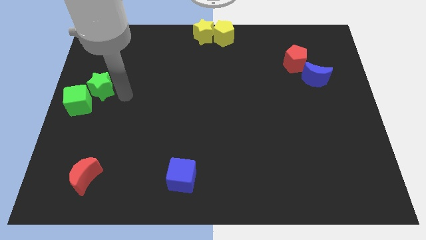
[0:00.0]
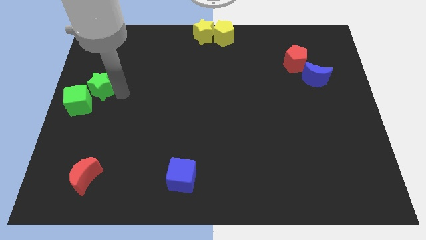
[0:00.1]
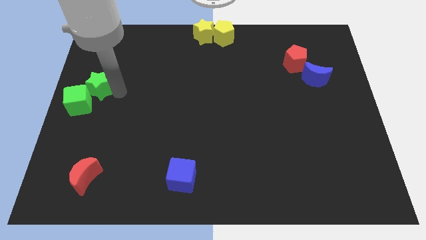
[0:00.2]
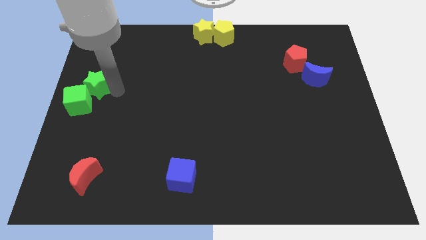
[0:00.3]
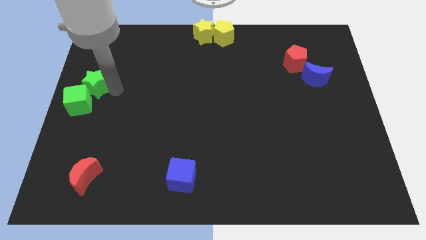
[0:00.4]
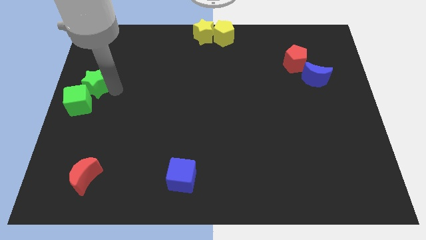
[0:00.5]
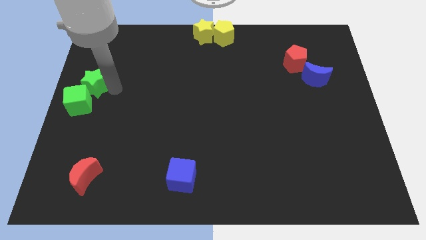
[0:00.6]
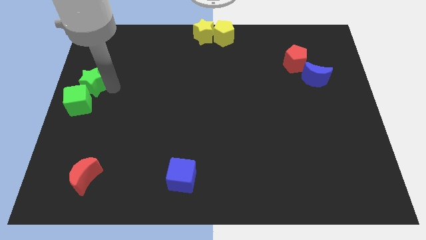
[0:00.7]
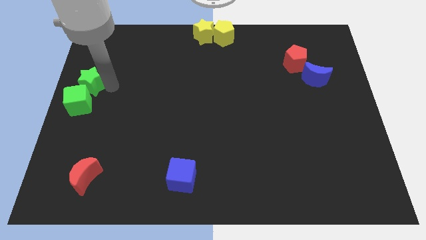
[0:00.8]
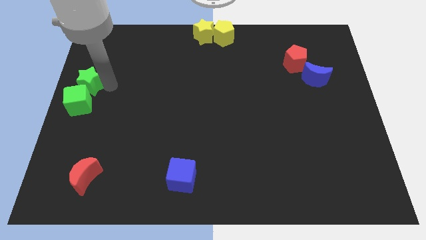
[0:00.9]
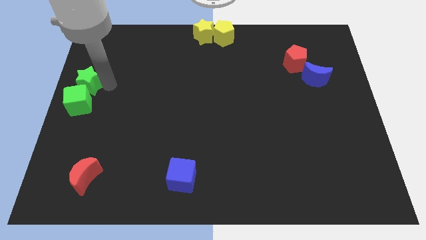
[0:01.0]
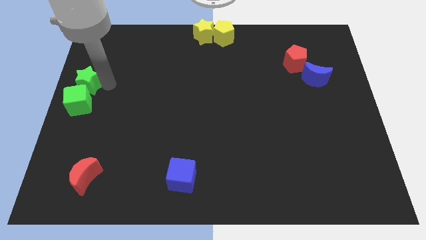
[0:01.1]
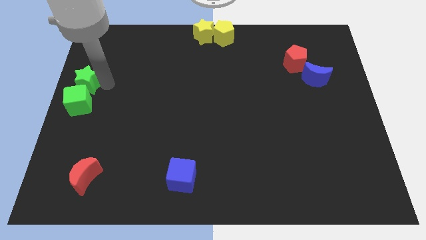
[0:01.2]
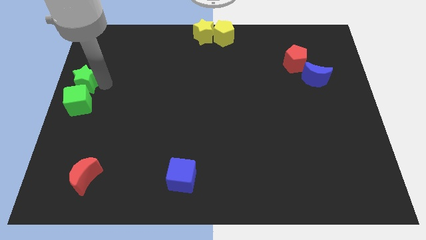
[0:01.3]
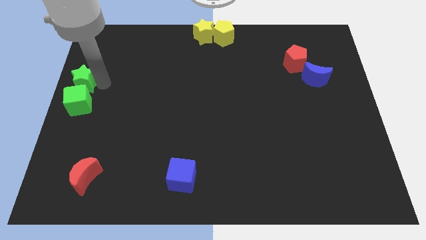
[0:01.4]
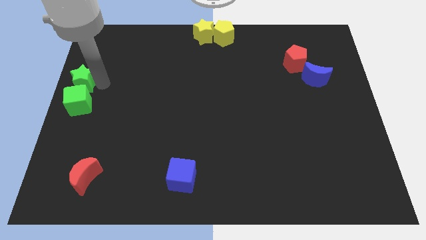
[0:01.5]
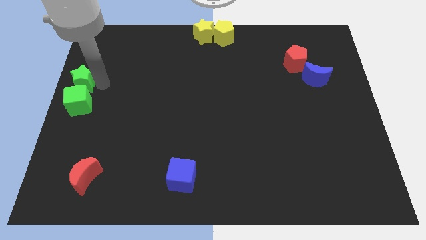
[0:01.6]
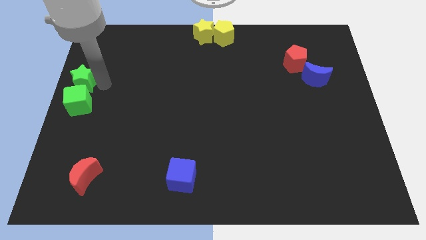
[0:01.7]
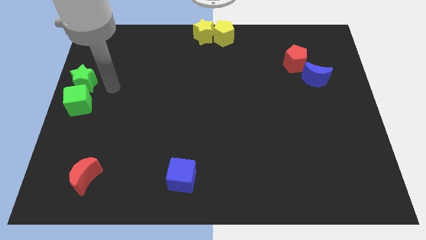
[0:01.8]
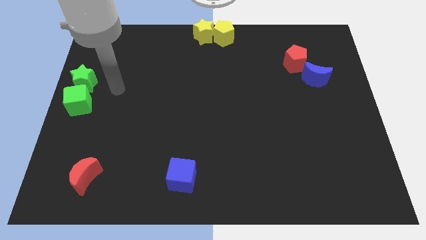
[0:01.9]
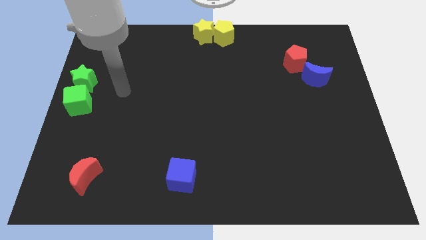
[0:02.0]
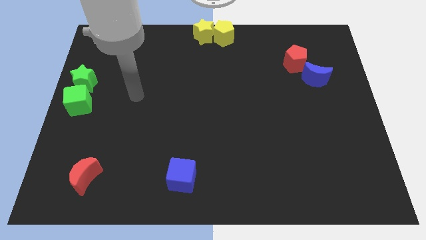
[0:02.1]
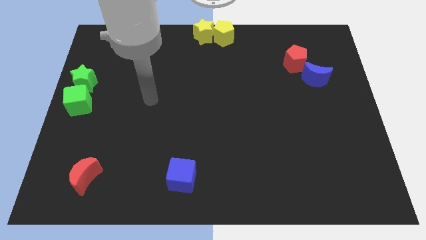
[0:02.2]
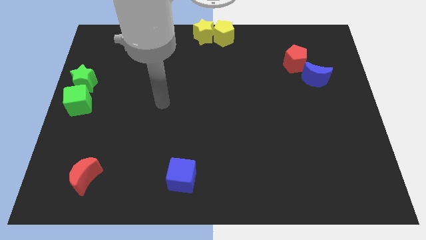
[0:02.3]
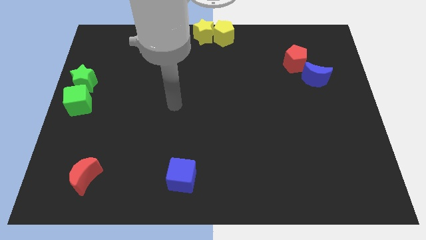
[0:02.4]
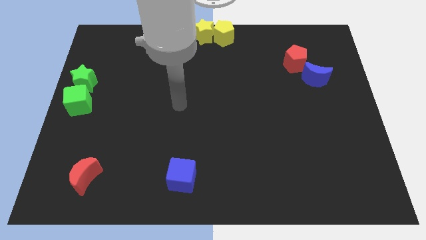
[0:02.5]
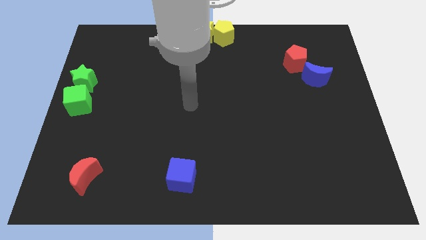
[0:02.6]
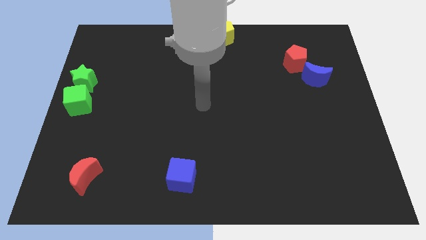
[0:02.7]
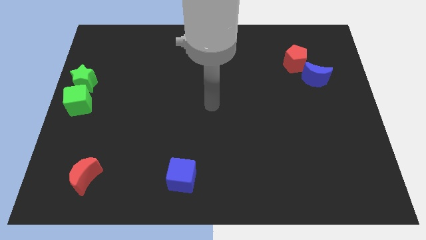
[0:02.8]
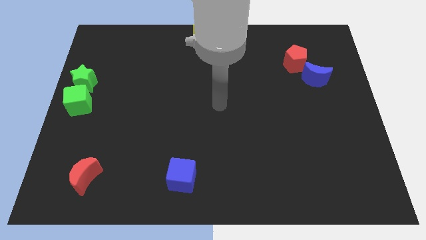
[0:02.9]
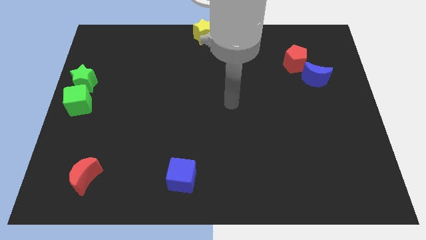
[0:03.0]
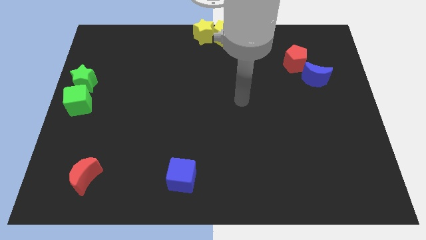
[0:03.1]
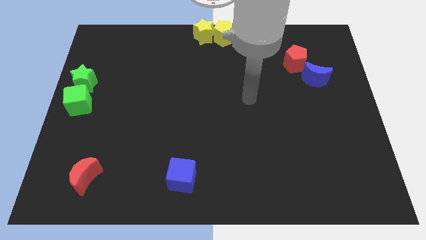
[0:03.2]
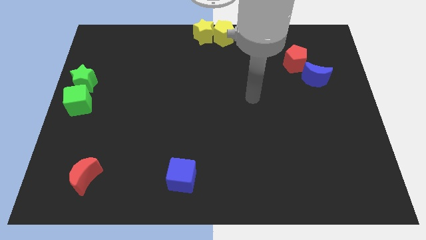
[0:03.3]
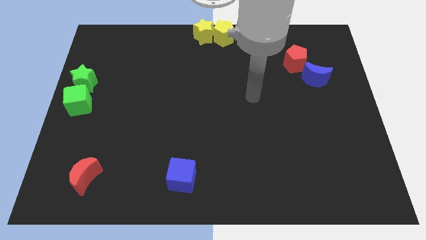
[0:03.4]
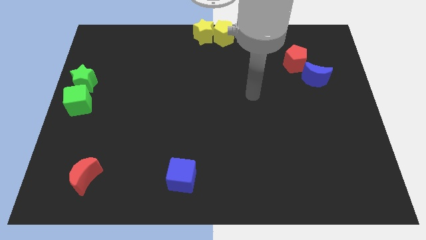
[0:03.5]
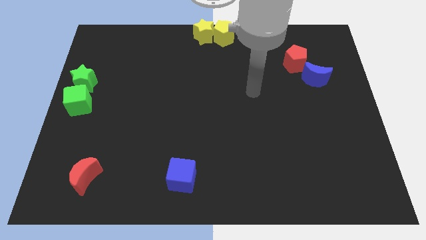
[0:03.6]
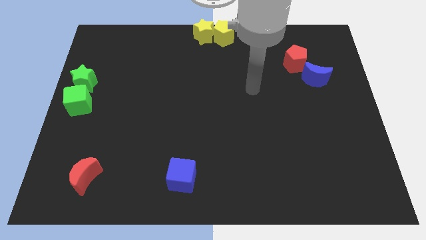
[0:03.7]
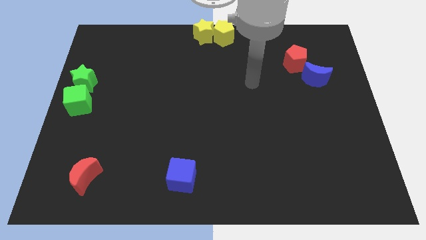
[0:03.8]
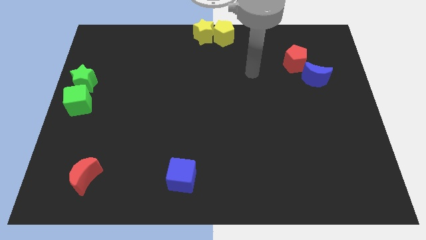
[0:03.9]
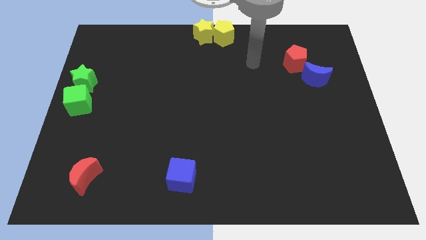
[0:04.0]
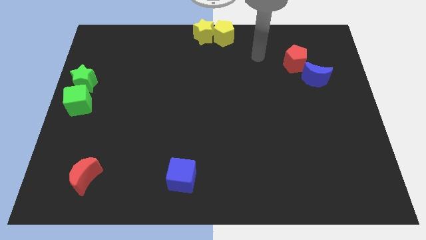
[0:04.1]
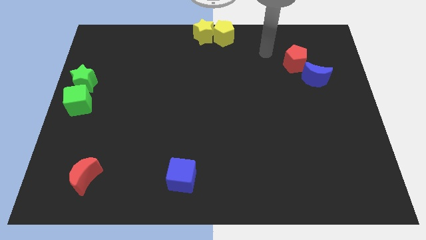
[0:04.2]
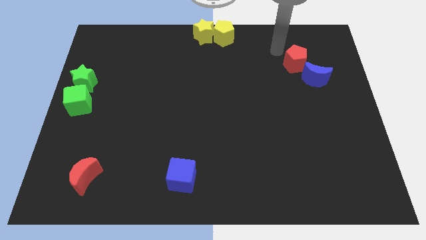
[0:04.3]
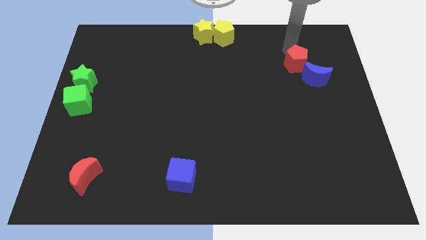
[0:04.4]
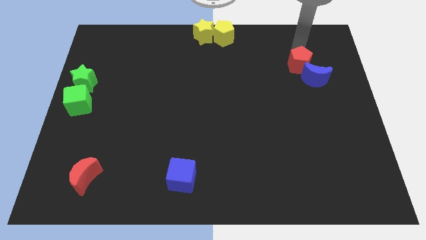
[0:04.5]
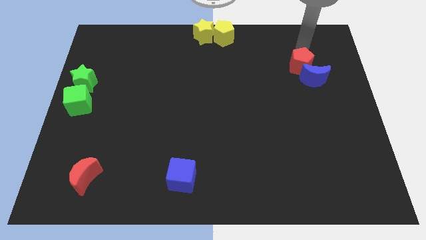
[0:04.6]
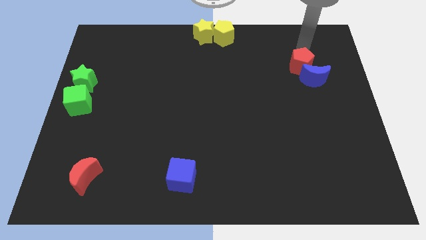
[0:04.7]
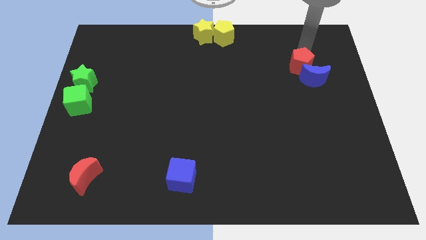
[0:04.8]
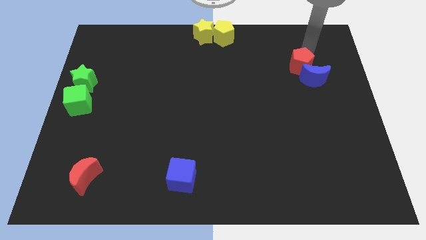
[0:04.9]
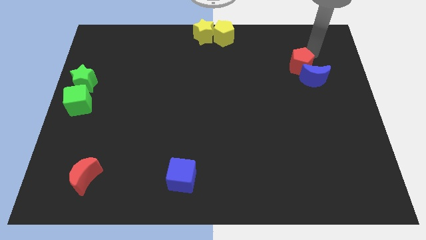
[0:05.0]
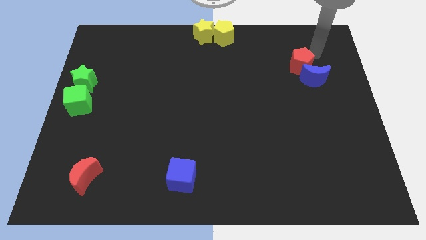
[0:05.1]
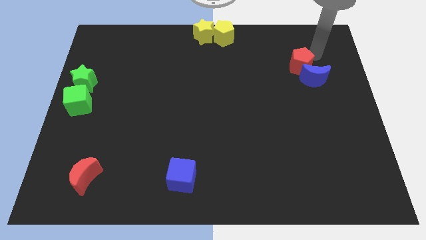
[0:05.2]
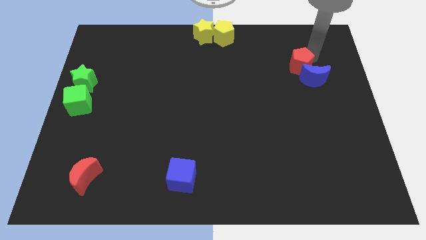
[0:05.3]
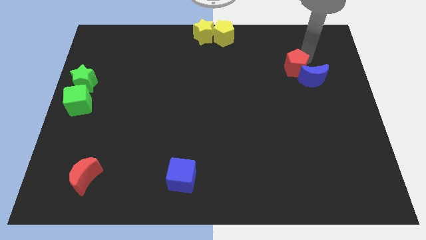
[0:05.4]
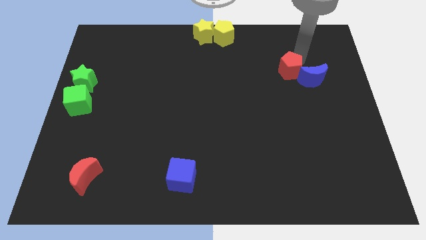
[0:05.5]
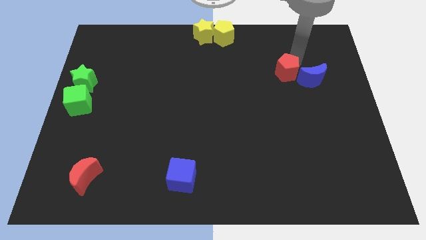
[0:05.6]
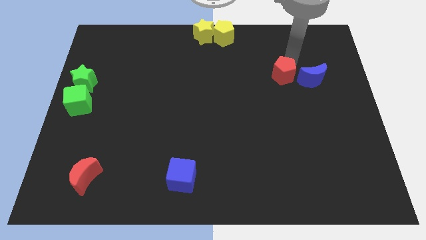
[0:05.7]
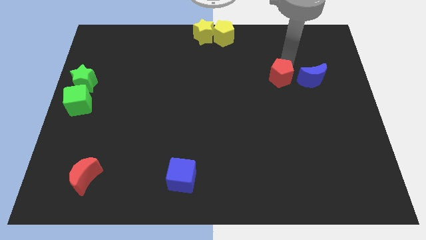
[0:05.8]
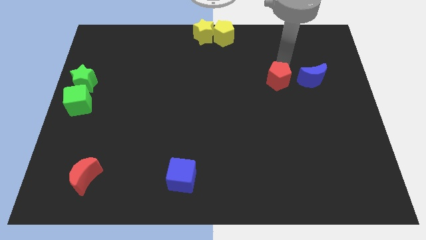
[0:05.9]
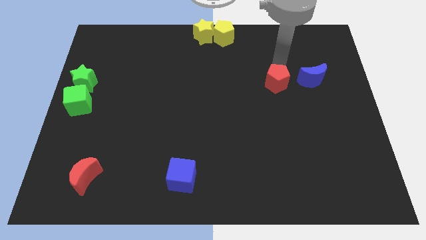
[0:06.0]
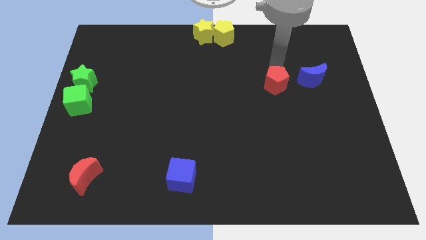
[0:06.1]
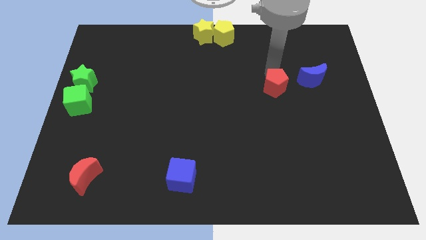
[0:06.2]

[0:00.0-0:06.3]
separate the red pentagon from the blue moon

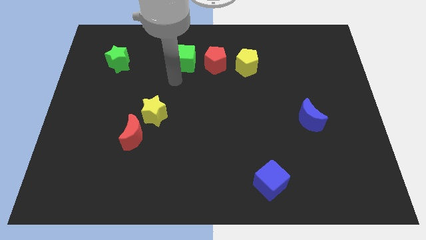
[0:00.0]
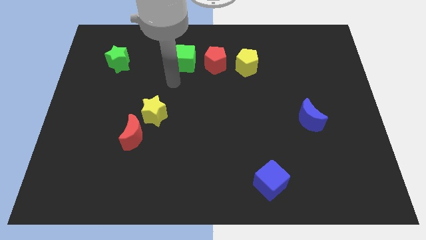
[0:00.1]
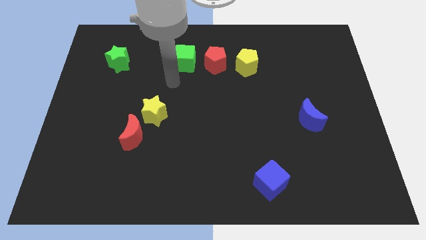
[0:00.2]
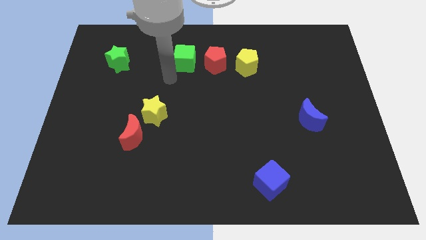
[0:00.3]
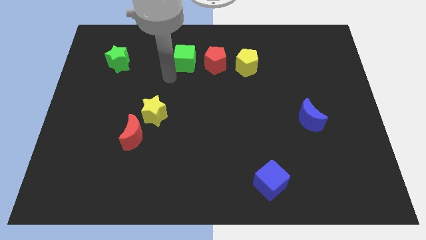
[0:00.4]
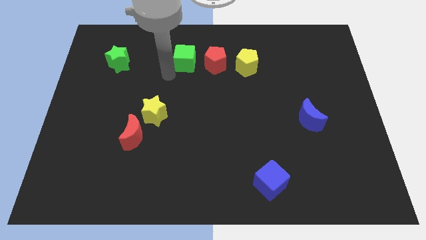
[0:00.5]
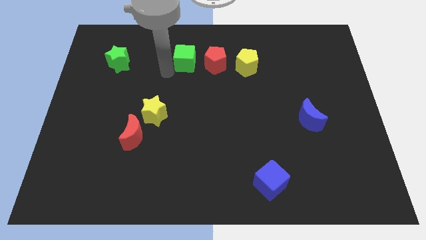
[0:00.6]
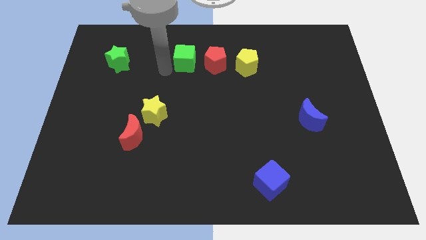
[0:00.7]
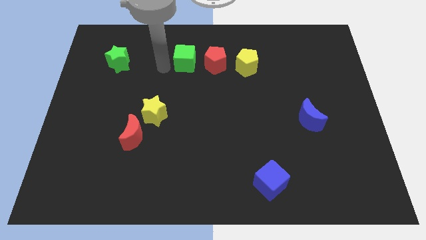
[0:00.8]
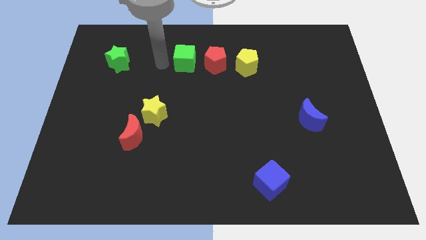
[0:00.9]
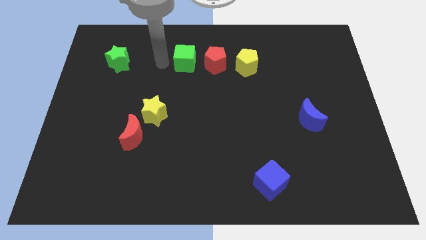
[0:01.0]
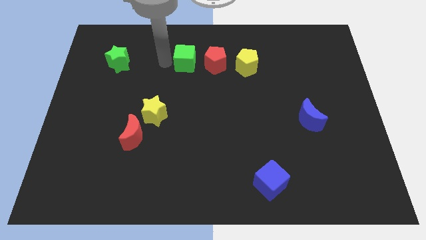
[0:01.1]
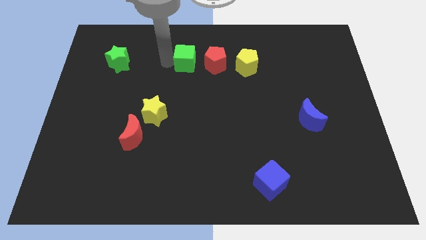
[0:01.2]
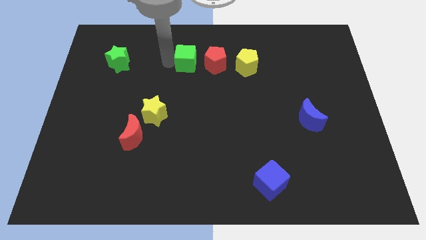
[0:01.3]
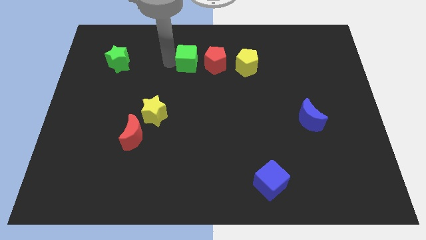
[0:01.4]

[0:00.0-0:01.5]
move green block close to red pentagon

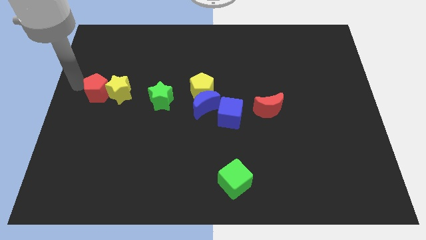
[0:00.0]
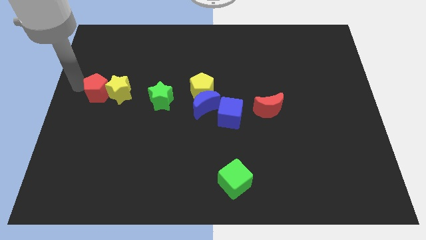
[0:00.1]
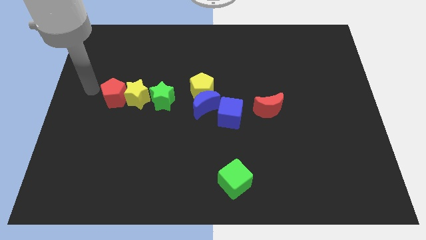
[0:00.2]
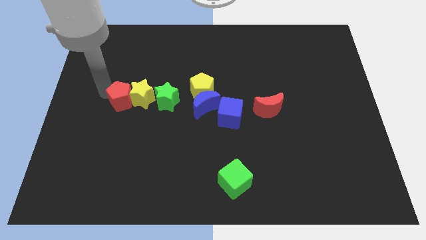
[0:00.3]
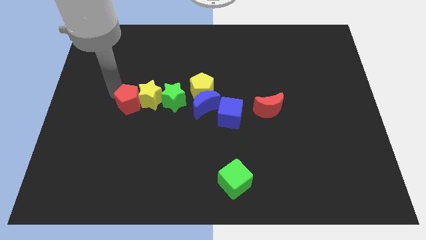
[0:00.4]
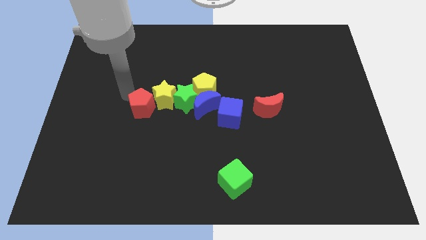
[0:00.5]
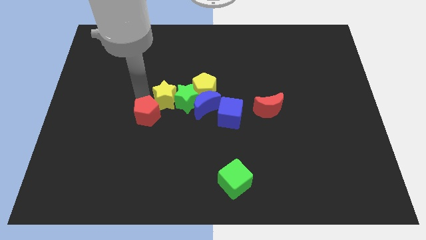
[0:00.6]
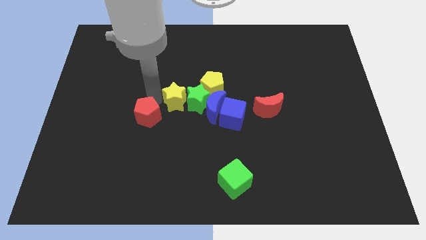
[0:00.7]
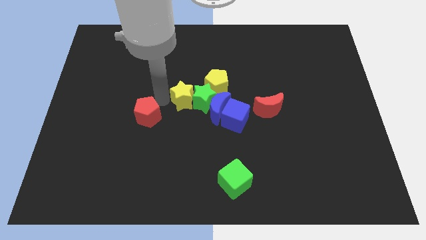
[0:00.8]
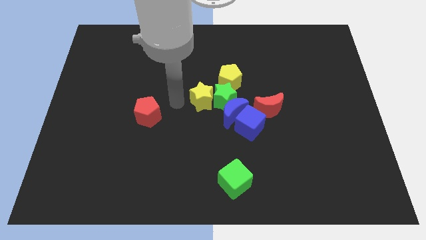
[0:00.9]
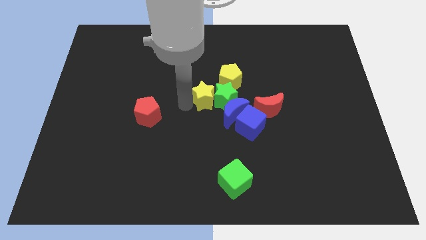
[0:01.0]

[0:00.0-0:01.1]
push the red pentagon and yellow star into the green star
